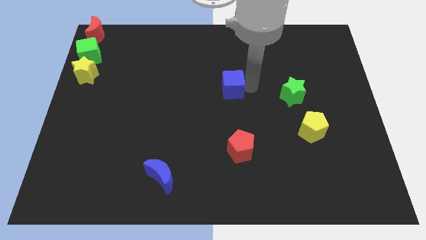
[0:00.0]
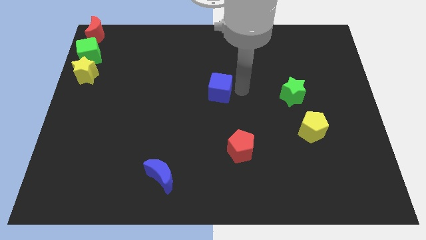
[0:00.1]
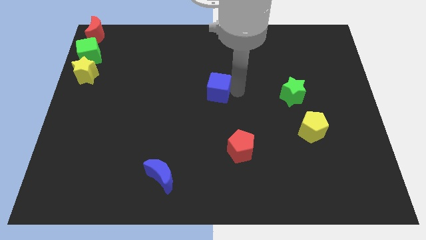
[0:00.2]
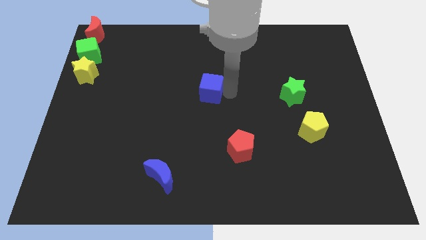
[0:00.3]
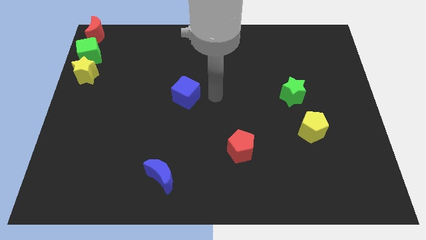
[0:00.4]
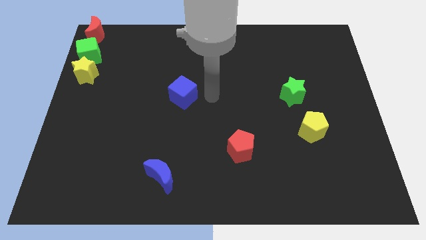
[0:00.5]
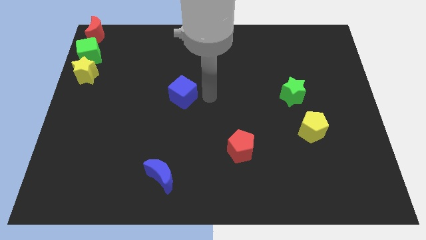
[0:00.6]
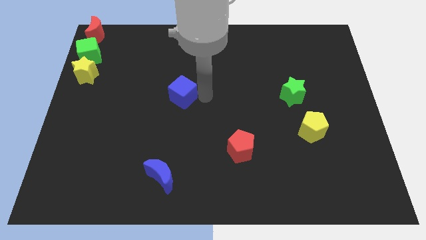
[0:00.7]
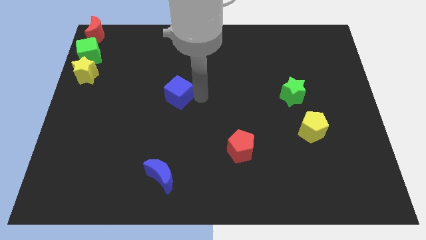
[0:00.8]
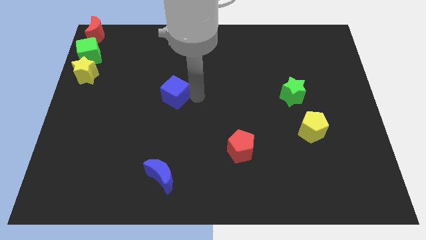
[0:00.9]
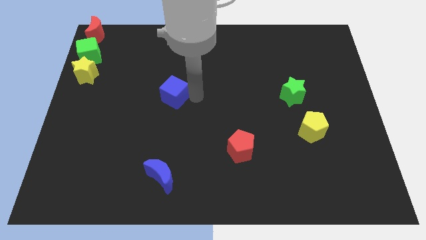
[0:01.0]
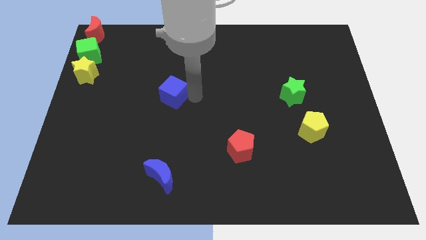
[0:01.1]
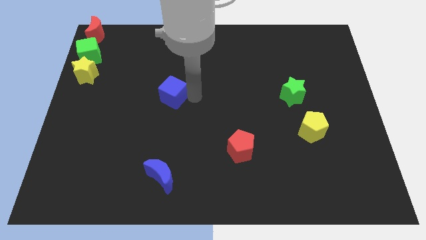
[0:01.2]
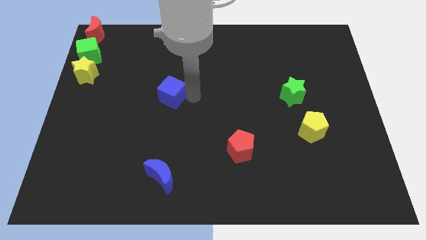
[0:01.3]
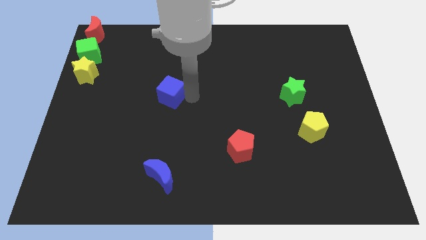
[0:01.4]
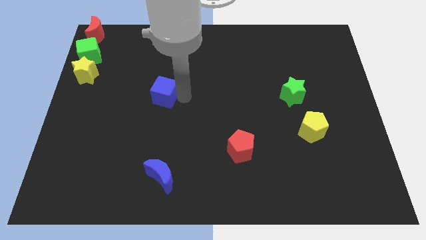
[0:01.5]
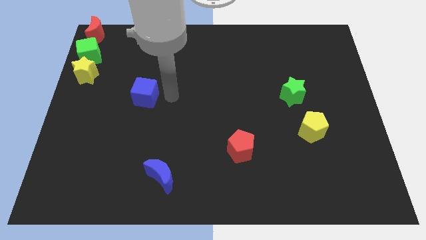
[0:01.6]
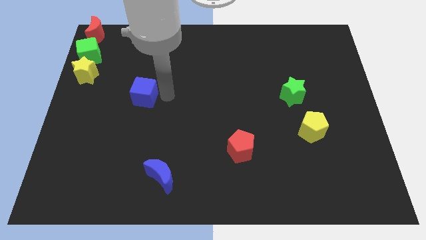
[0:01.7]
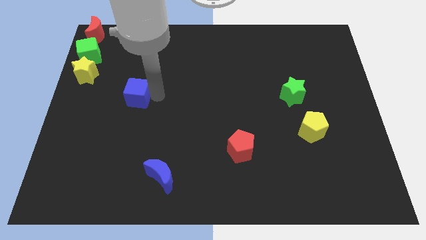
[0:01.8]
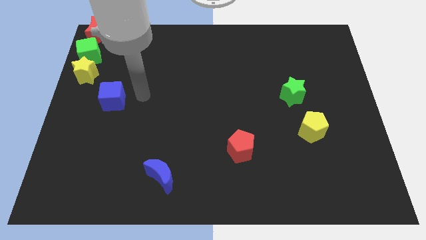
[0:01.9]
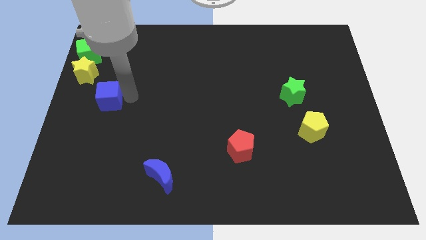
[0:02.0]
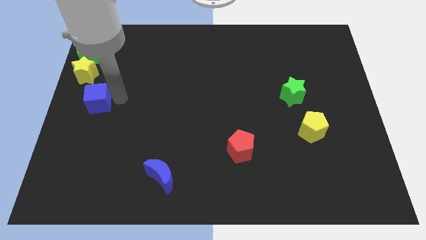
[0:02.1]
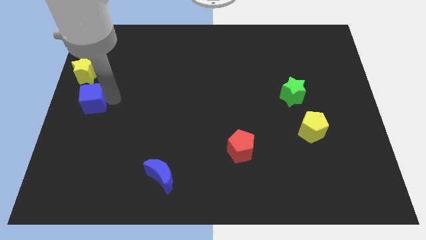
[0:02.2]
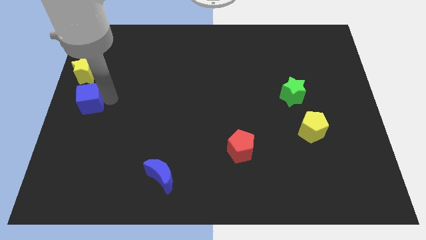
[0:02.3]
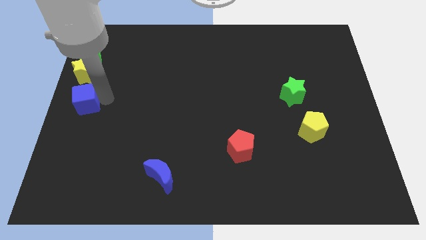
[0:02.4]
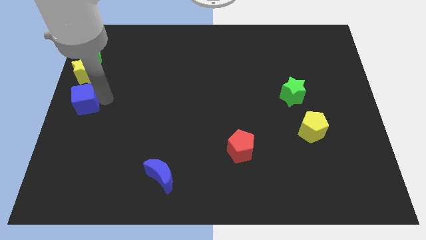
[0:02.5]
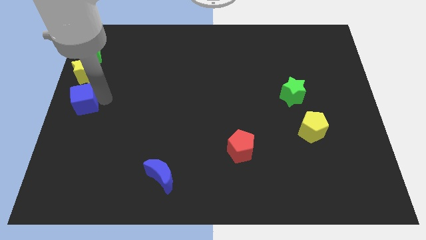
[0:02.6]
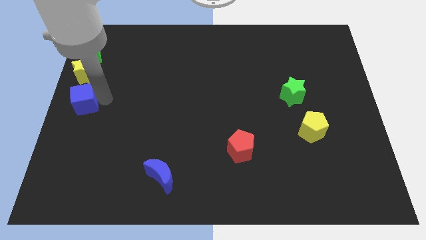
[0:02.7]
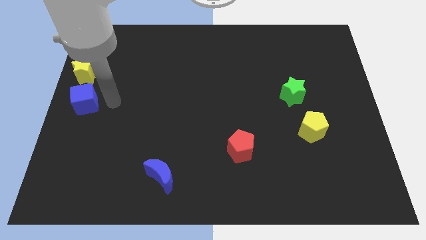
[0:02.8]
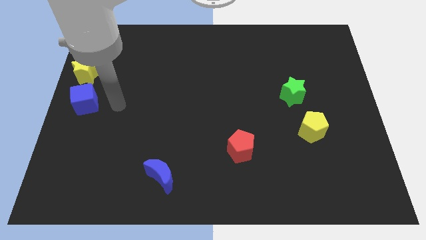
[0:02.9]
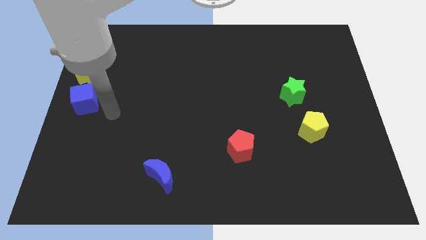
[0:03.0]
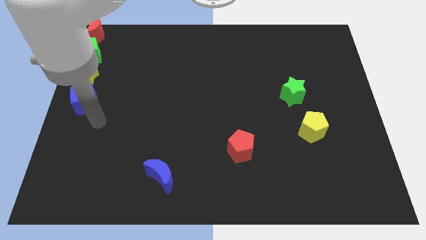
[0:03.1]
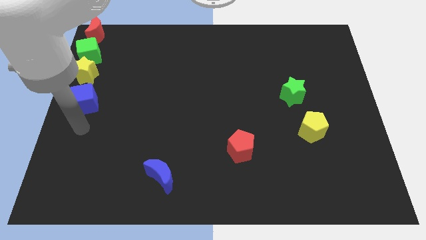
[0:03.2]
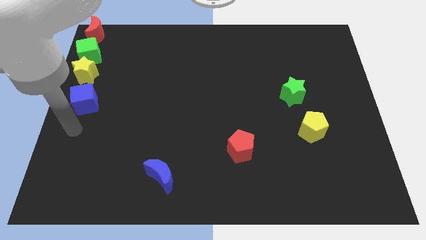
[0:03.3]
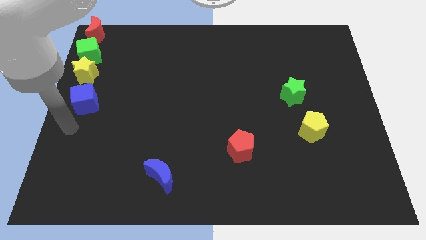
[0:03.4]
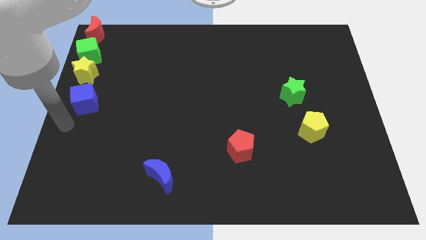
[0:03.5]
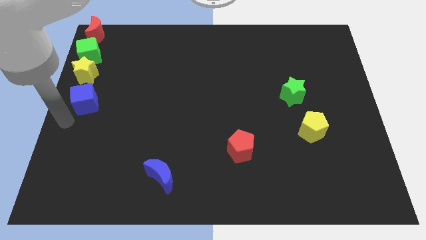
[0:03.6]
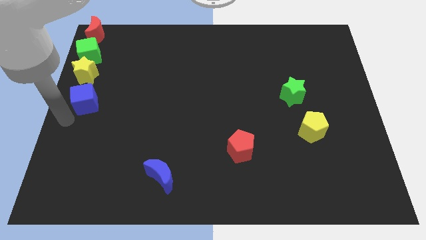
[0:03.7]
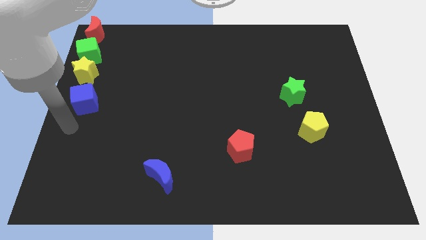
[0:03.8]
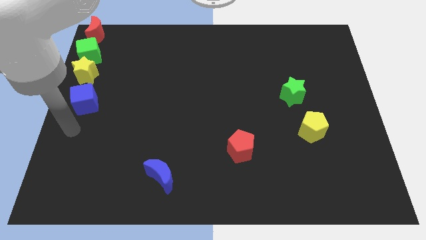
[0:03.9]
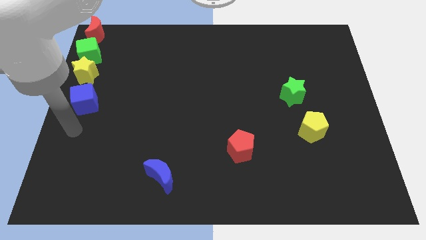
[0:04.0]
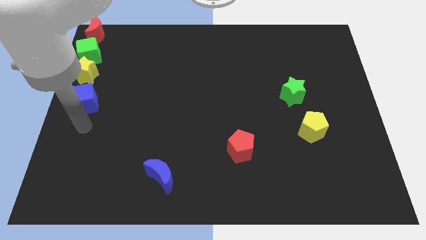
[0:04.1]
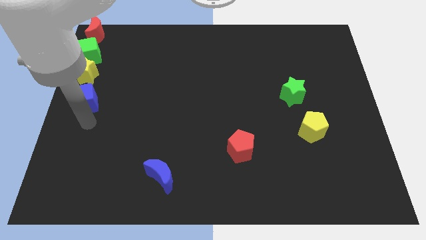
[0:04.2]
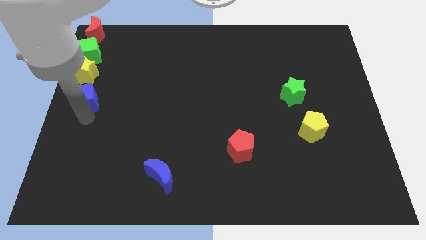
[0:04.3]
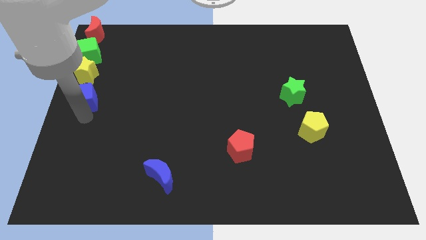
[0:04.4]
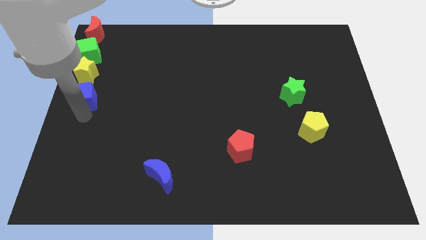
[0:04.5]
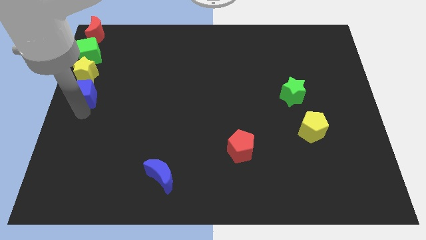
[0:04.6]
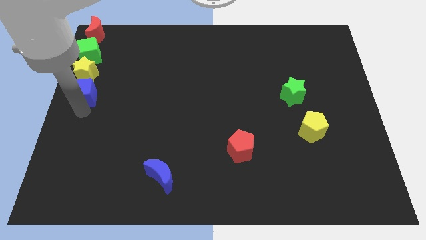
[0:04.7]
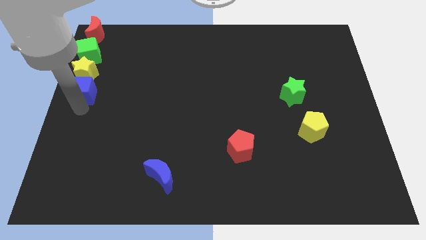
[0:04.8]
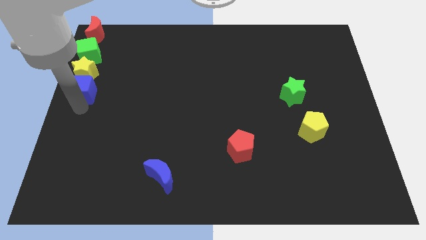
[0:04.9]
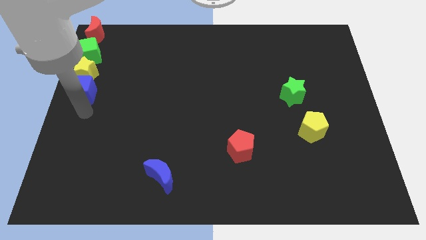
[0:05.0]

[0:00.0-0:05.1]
place the blue cube below the yellow star

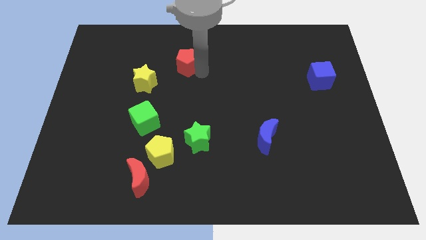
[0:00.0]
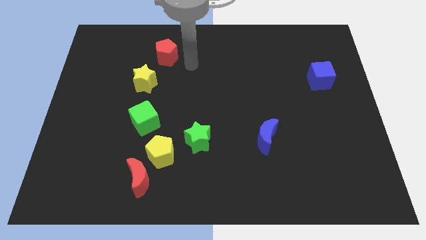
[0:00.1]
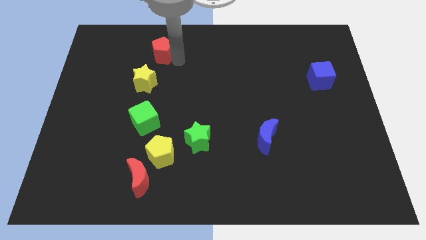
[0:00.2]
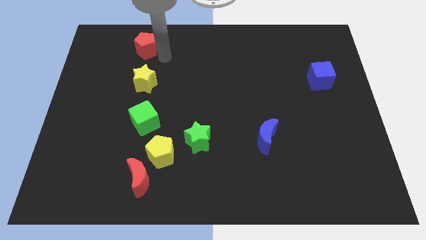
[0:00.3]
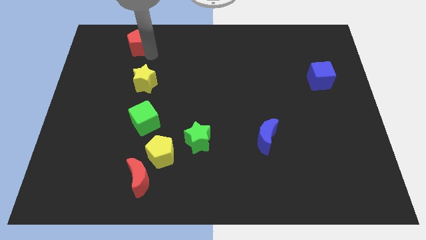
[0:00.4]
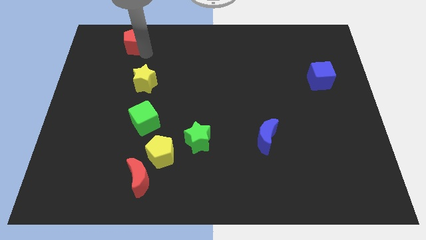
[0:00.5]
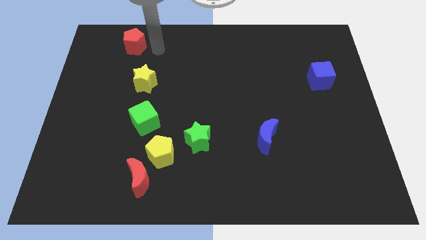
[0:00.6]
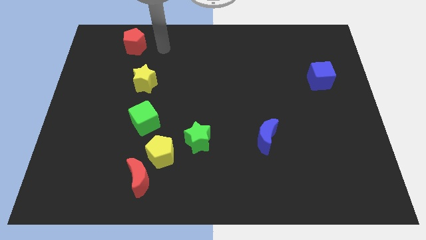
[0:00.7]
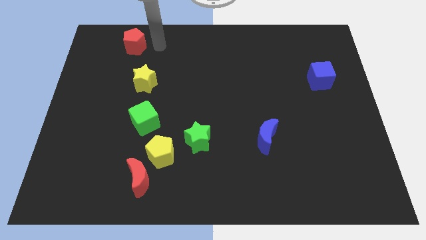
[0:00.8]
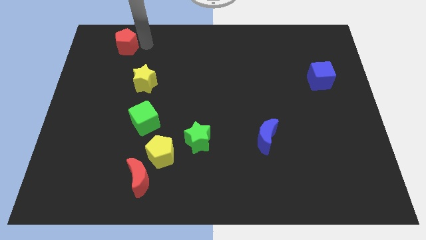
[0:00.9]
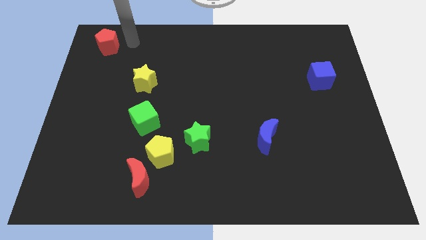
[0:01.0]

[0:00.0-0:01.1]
push the red pentagon towards the top left side of the board

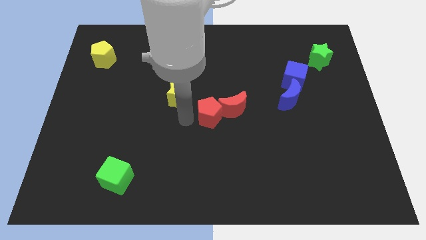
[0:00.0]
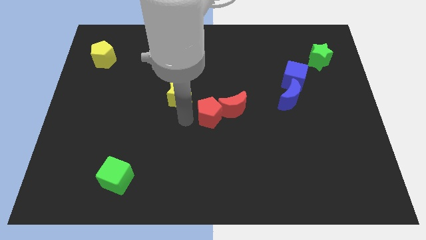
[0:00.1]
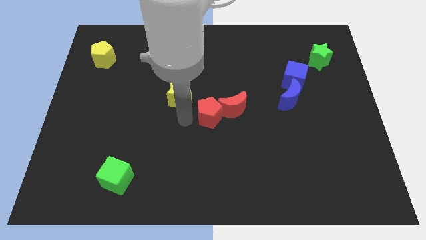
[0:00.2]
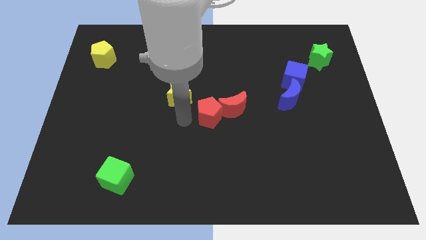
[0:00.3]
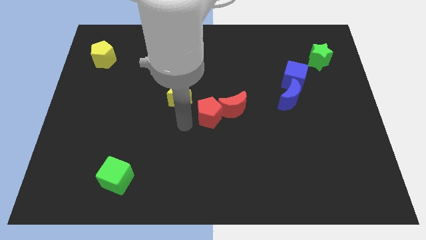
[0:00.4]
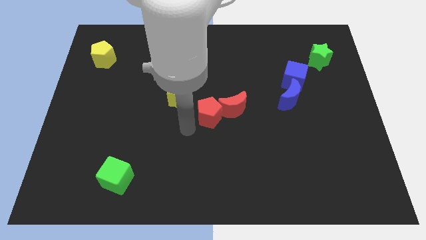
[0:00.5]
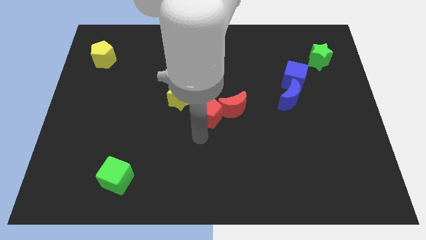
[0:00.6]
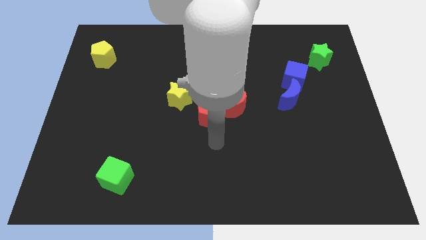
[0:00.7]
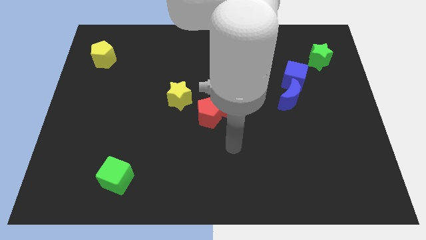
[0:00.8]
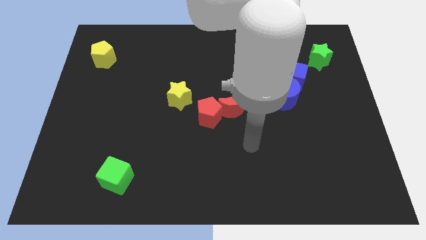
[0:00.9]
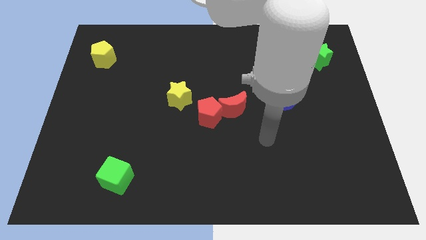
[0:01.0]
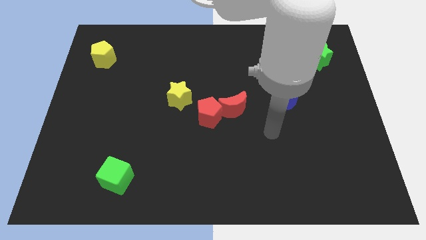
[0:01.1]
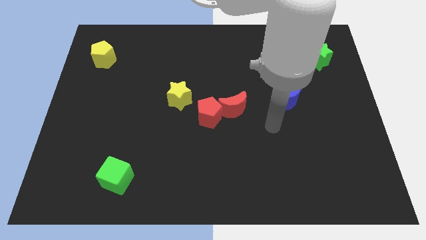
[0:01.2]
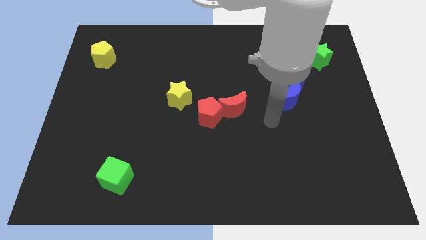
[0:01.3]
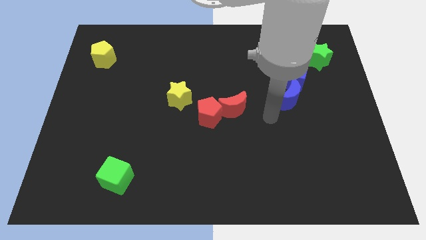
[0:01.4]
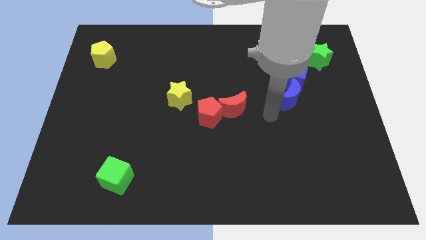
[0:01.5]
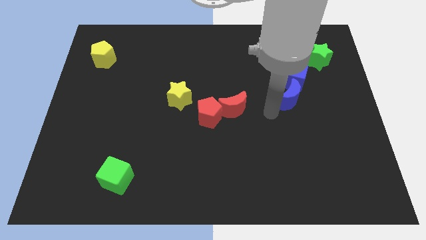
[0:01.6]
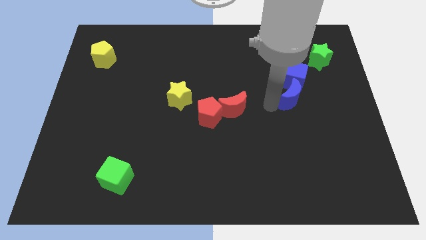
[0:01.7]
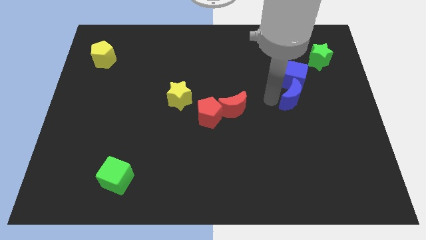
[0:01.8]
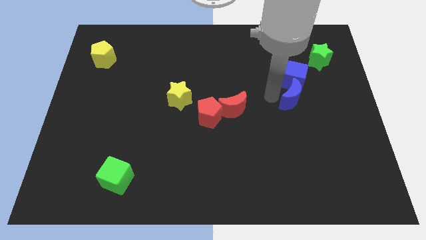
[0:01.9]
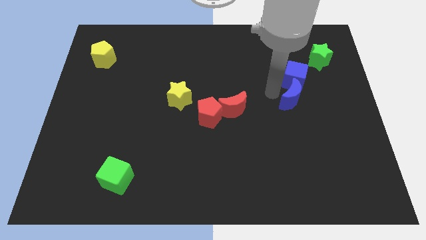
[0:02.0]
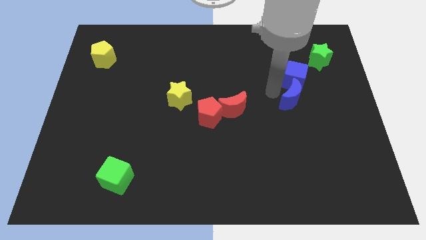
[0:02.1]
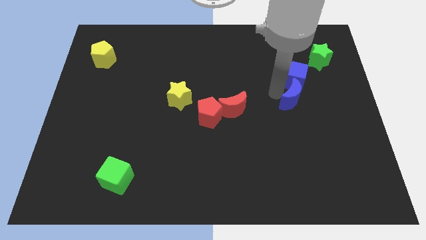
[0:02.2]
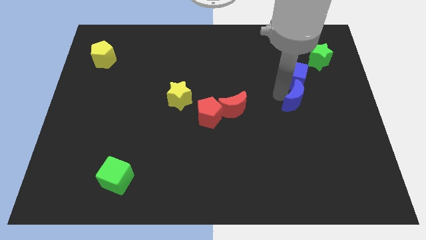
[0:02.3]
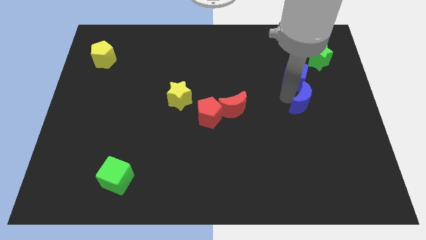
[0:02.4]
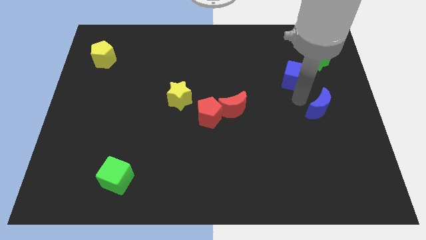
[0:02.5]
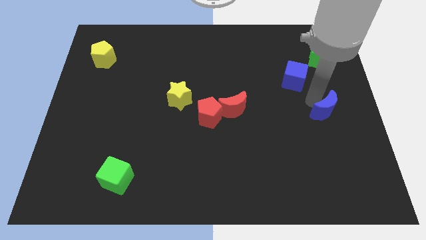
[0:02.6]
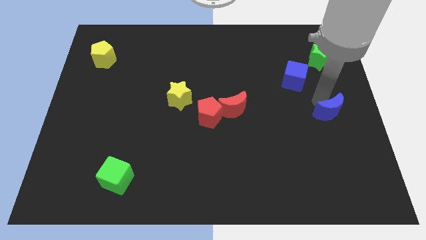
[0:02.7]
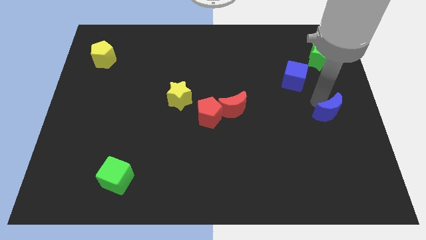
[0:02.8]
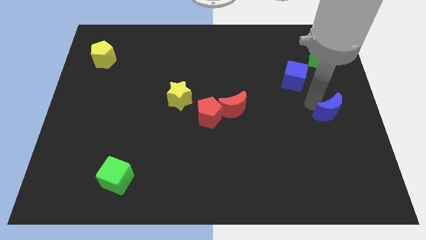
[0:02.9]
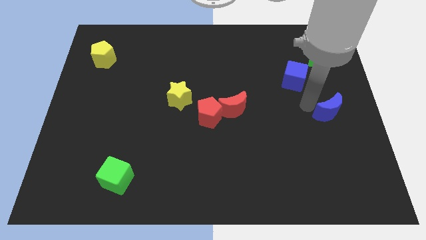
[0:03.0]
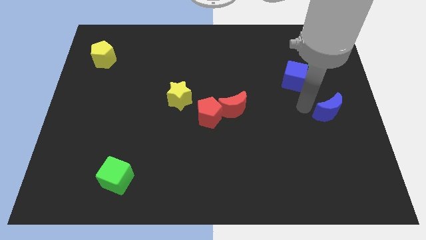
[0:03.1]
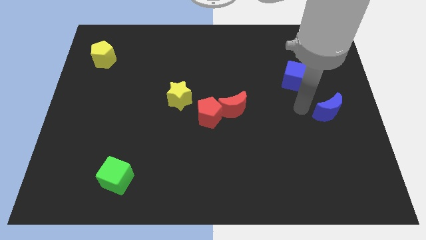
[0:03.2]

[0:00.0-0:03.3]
separate the blue crescent from the blue cube
